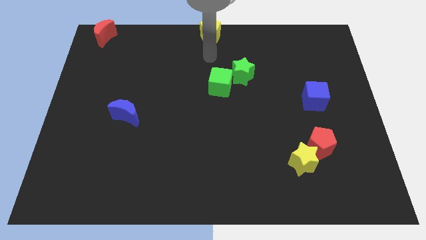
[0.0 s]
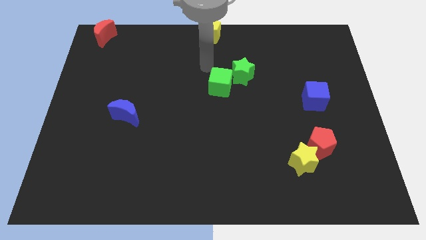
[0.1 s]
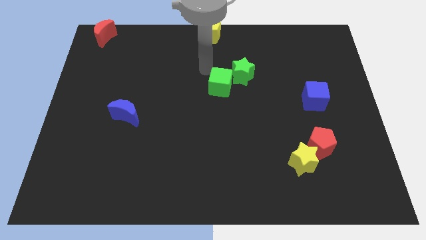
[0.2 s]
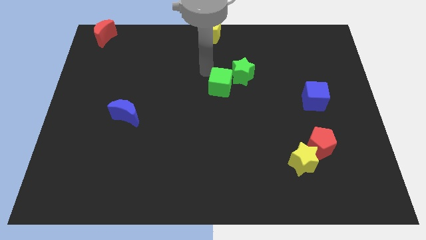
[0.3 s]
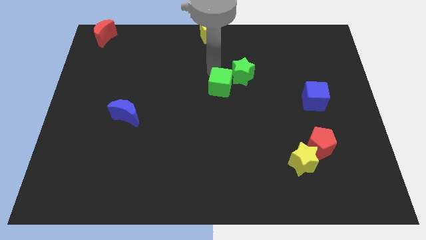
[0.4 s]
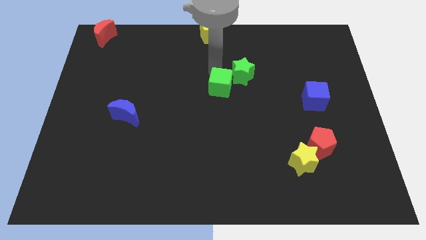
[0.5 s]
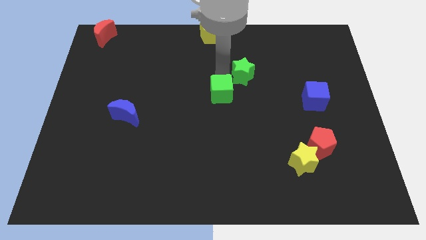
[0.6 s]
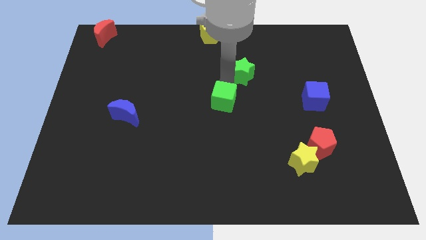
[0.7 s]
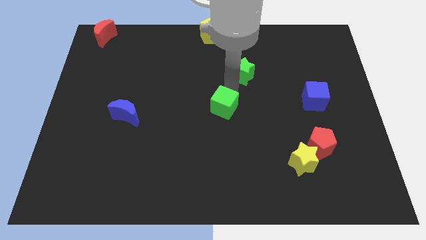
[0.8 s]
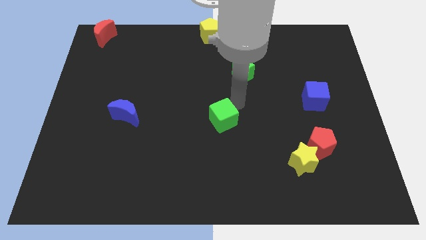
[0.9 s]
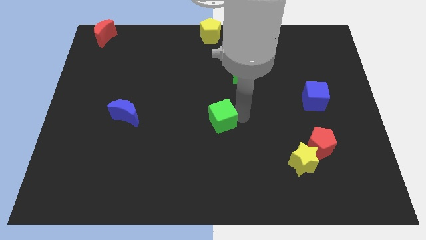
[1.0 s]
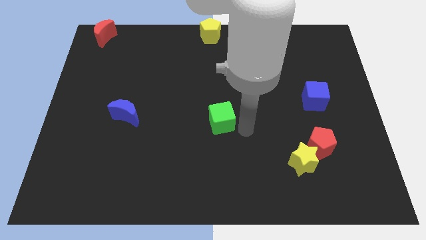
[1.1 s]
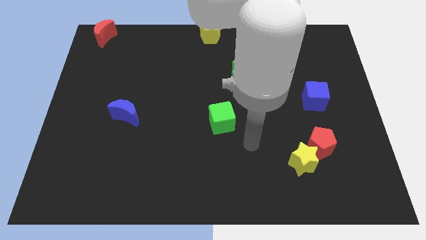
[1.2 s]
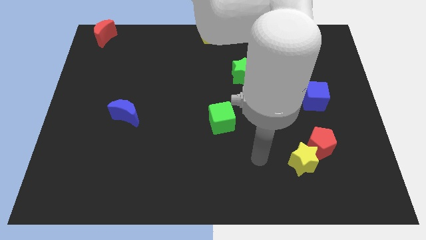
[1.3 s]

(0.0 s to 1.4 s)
separate the green cube from the green star

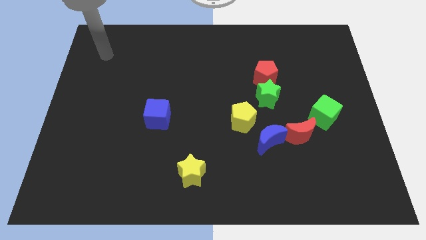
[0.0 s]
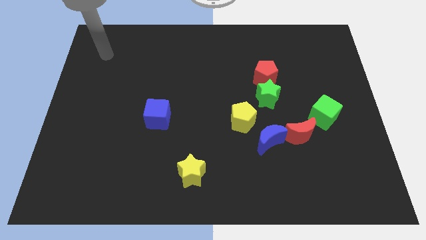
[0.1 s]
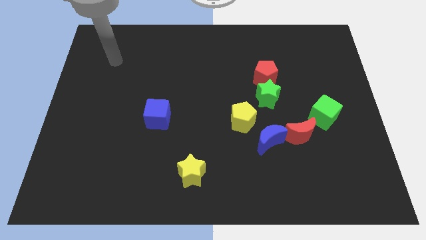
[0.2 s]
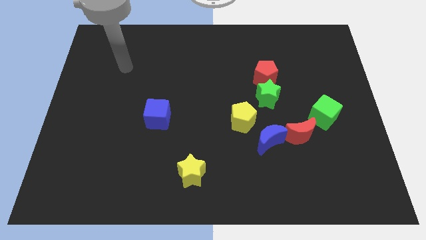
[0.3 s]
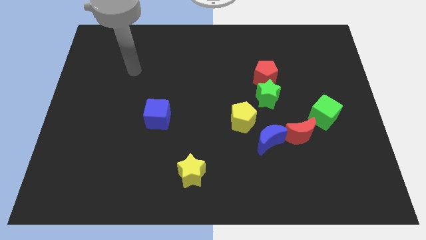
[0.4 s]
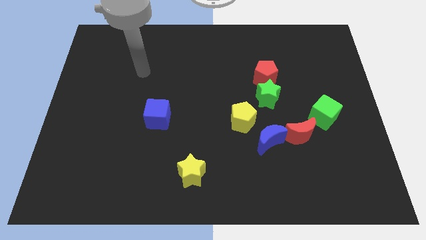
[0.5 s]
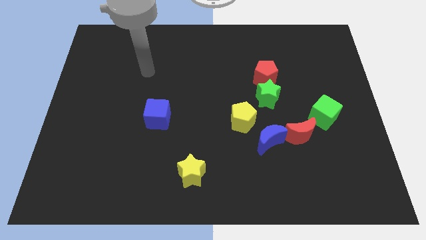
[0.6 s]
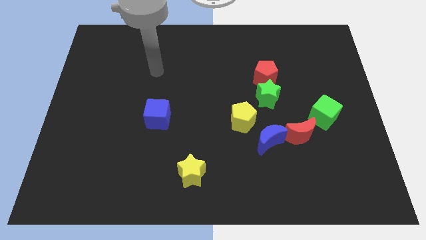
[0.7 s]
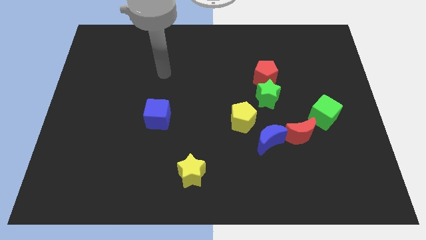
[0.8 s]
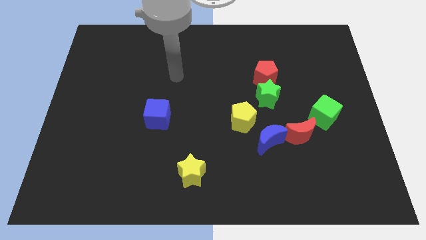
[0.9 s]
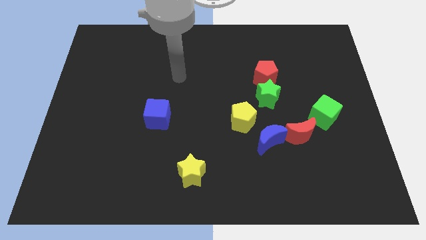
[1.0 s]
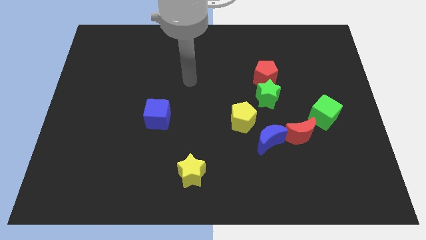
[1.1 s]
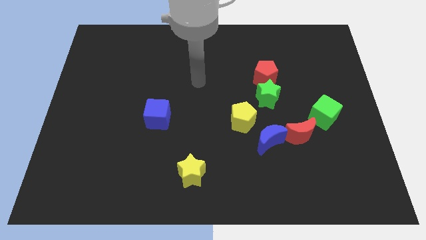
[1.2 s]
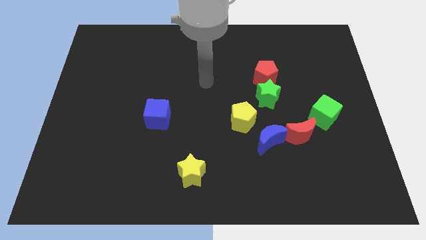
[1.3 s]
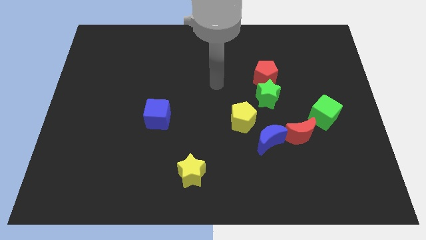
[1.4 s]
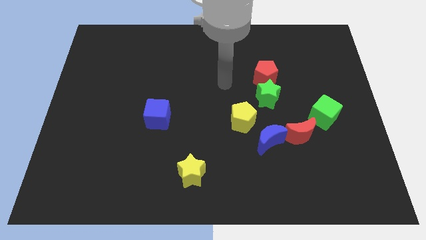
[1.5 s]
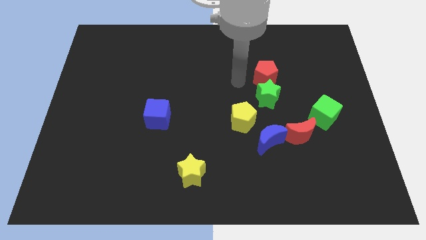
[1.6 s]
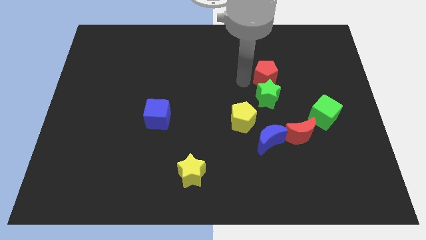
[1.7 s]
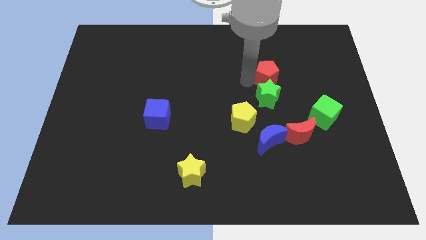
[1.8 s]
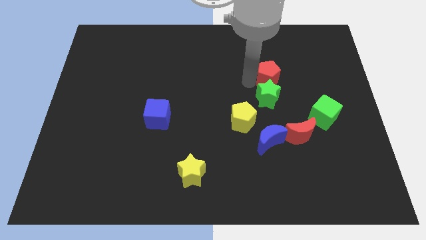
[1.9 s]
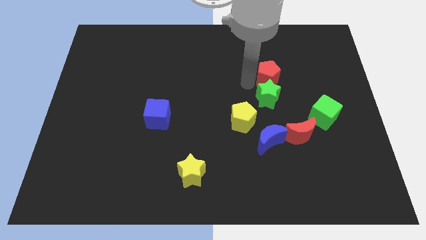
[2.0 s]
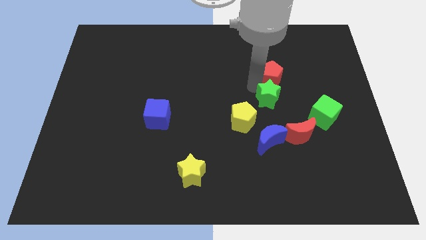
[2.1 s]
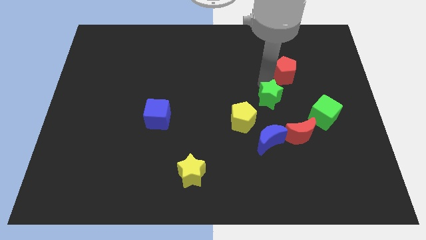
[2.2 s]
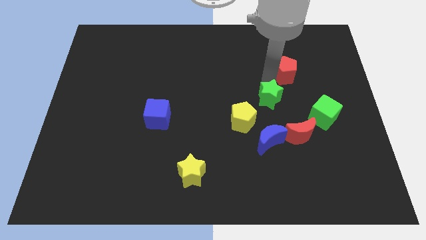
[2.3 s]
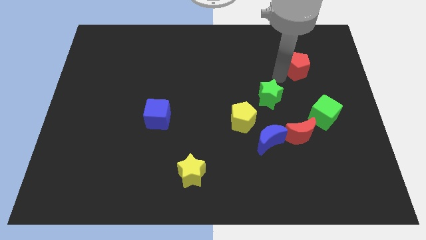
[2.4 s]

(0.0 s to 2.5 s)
slightly push the red pentagon to the right of the board

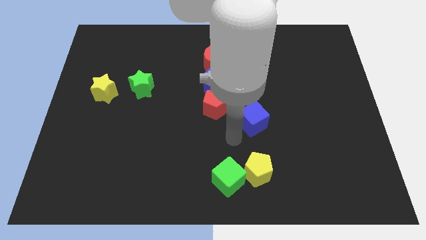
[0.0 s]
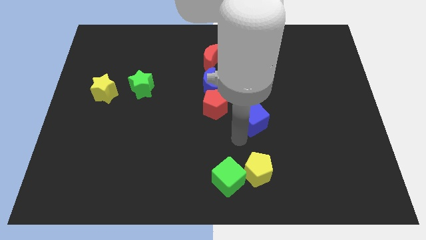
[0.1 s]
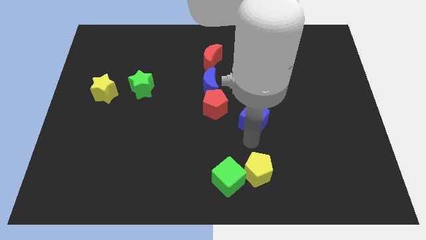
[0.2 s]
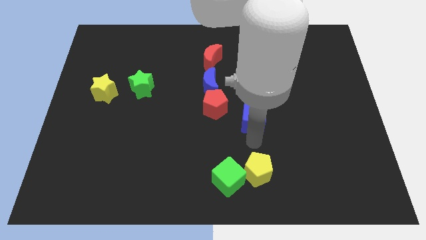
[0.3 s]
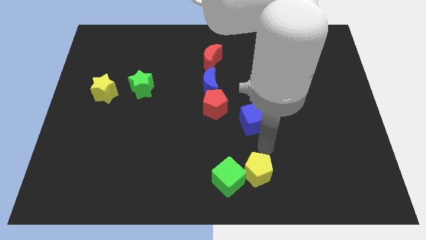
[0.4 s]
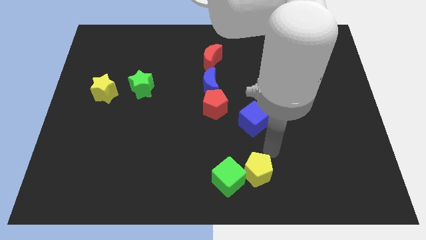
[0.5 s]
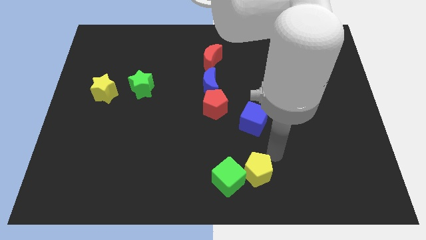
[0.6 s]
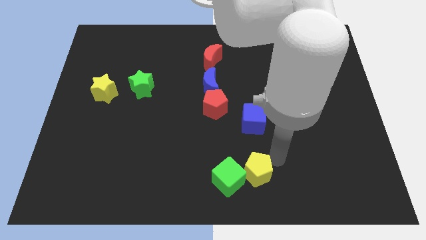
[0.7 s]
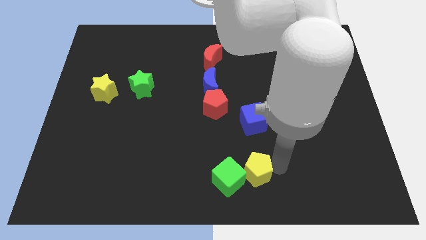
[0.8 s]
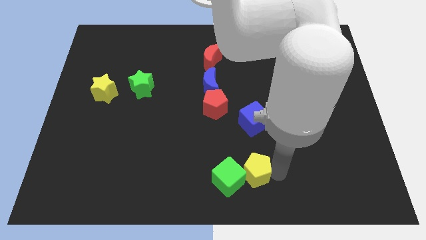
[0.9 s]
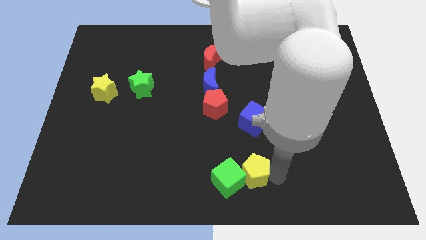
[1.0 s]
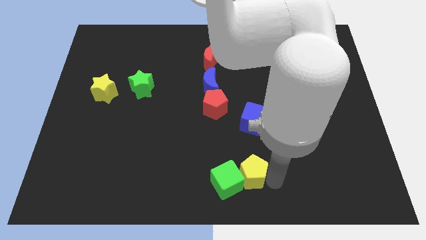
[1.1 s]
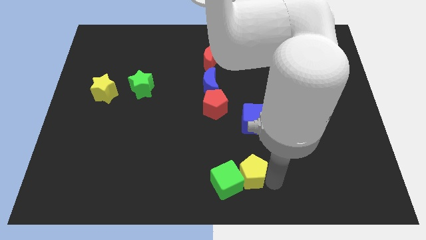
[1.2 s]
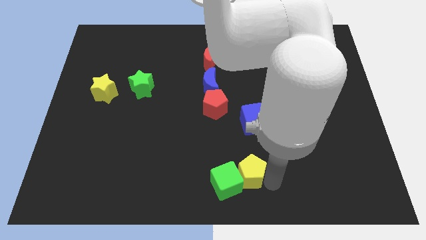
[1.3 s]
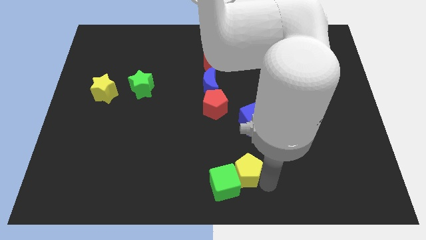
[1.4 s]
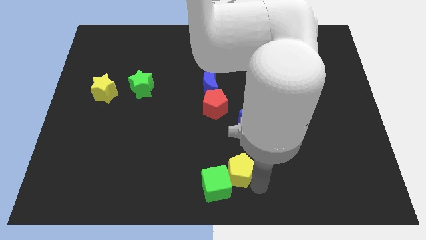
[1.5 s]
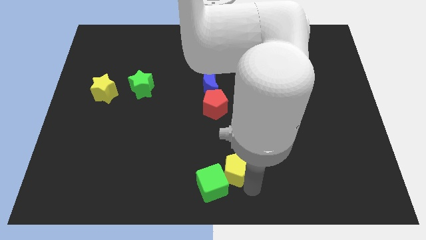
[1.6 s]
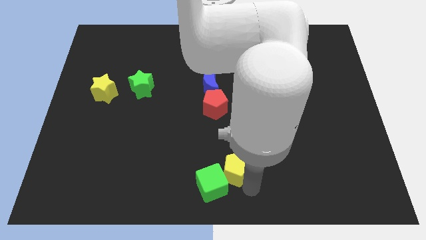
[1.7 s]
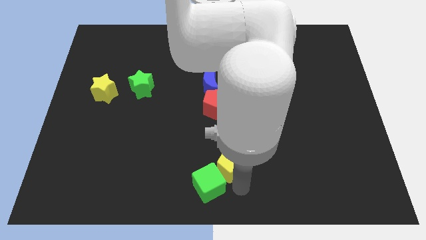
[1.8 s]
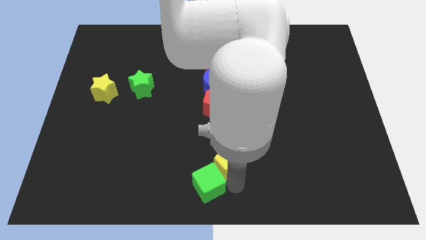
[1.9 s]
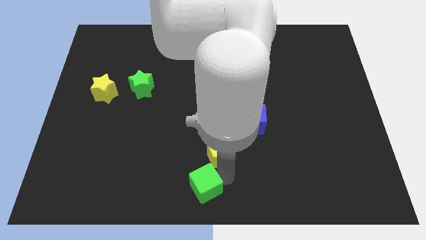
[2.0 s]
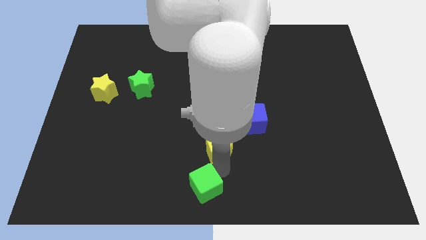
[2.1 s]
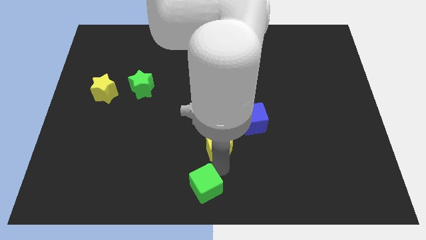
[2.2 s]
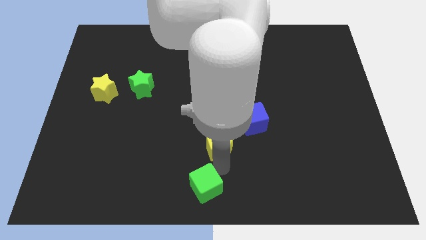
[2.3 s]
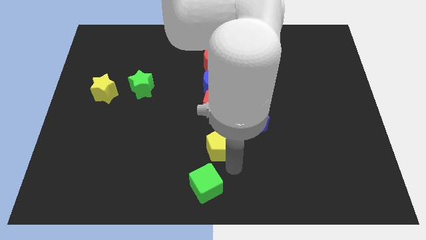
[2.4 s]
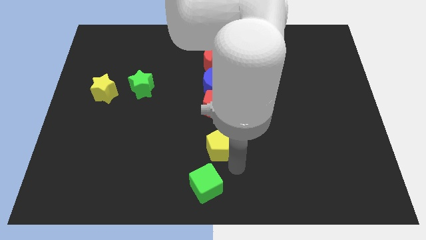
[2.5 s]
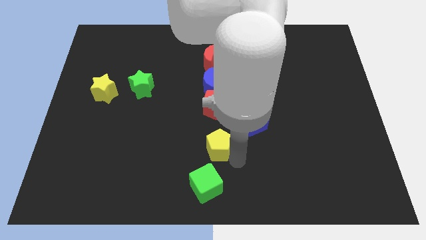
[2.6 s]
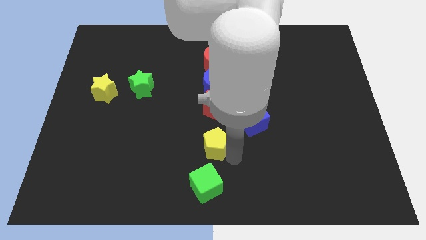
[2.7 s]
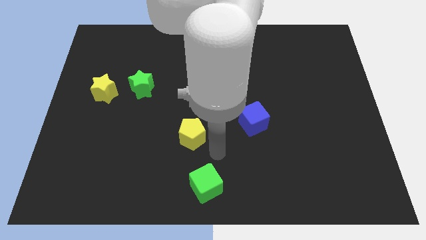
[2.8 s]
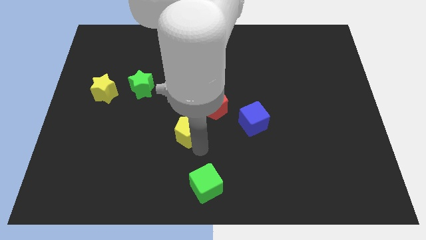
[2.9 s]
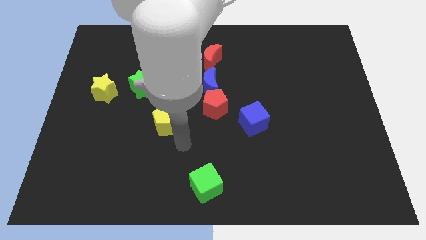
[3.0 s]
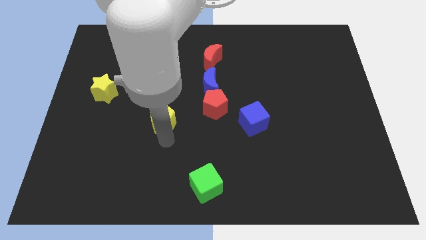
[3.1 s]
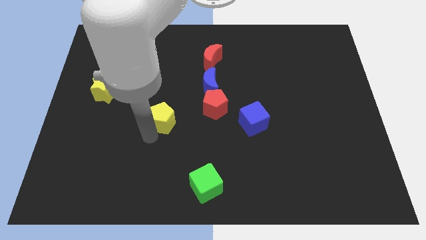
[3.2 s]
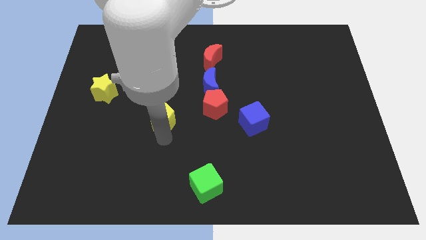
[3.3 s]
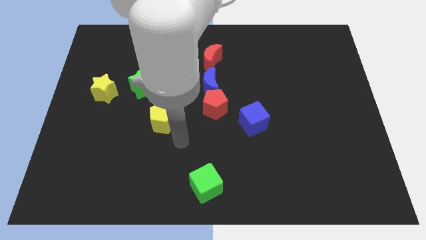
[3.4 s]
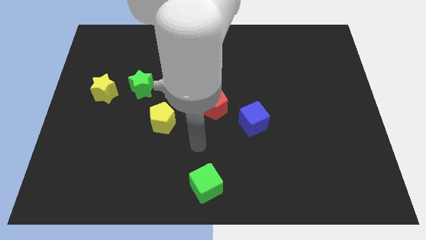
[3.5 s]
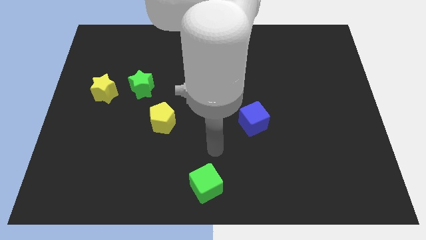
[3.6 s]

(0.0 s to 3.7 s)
place the yellow pentagon parallel to the left to the blue cube

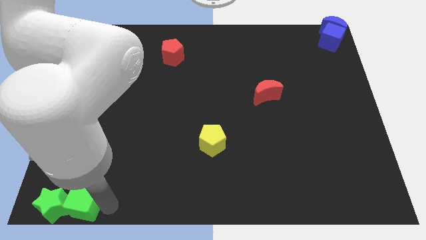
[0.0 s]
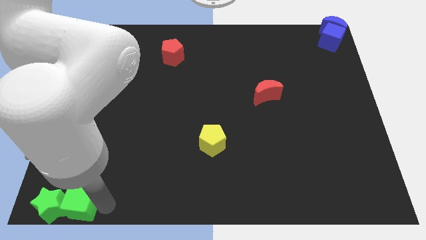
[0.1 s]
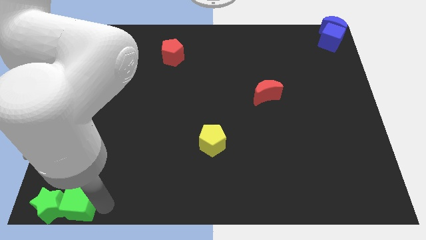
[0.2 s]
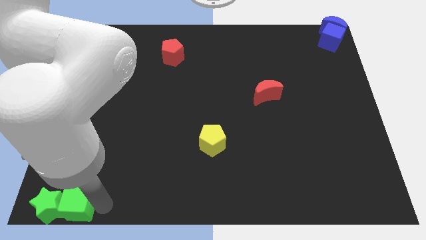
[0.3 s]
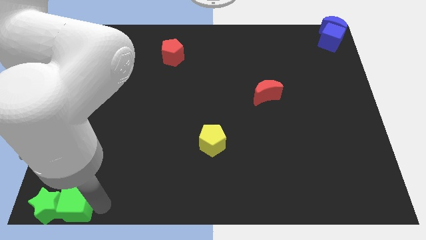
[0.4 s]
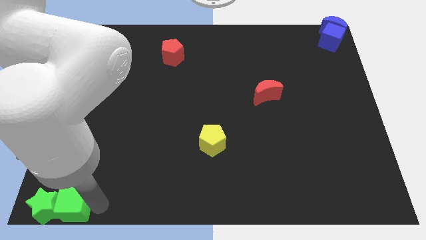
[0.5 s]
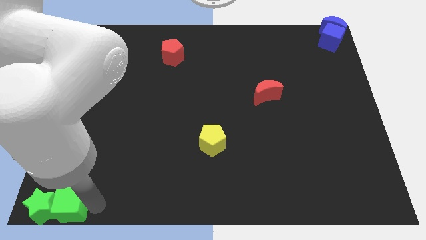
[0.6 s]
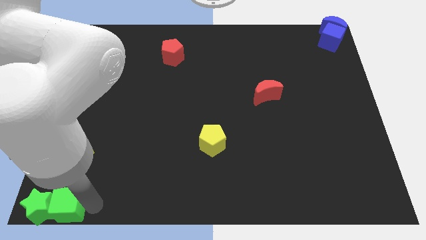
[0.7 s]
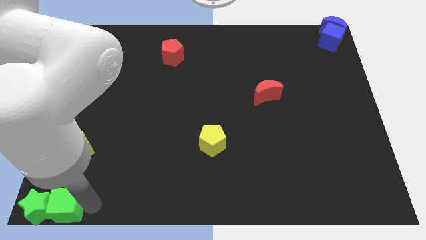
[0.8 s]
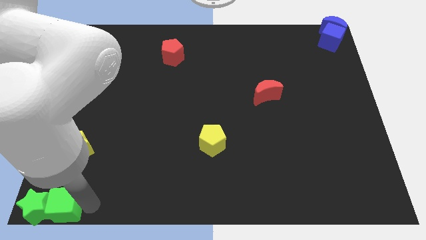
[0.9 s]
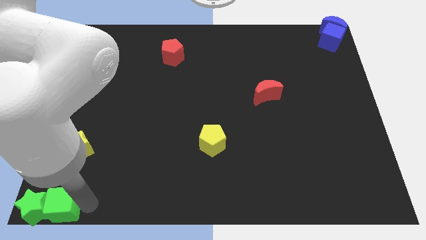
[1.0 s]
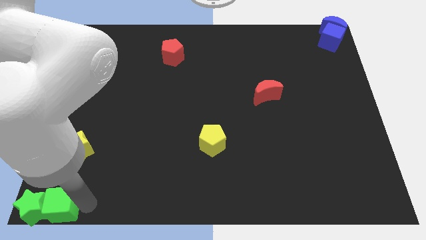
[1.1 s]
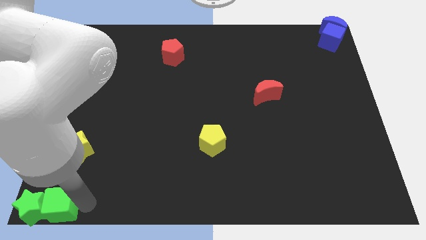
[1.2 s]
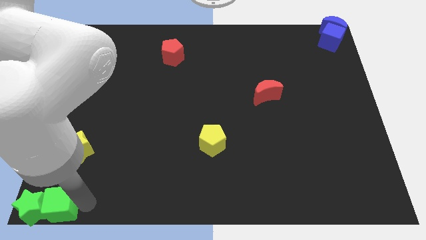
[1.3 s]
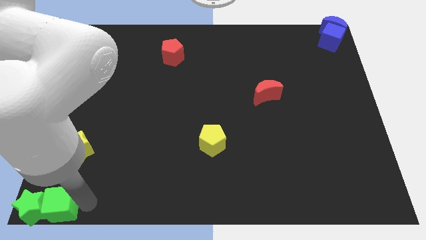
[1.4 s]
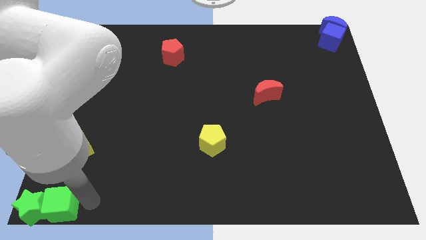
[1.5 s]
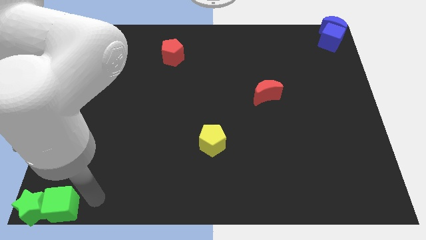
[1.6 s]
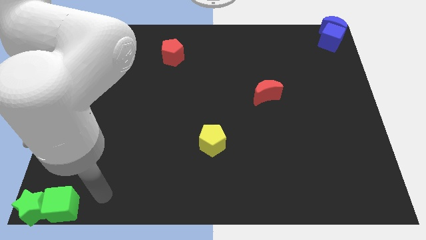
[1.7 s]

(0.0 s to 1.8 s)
move the green cube along with green star to the bottom left of the board
